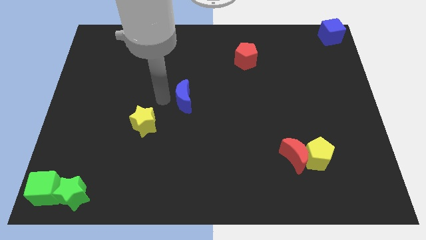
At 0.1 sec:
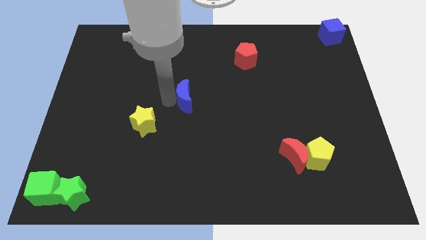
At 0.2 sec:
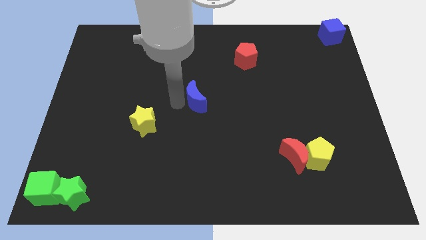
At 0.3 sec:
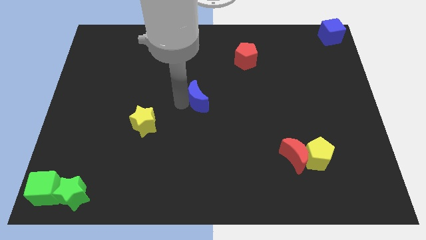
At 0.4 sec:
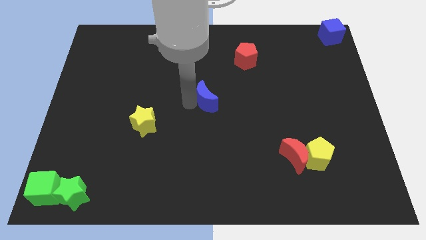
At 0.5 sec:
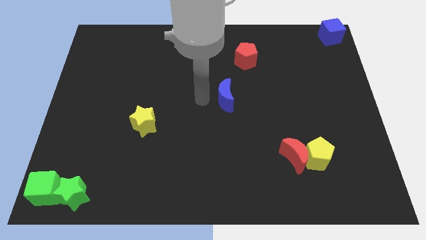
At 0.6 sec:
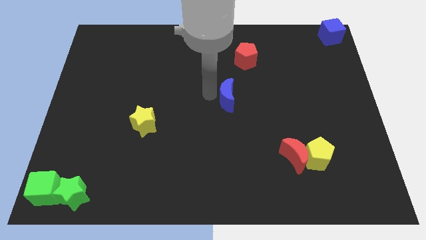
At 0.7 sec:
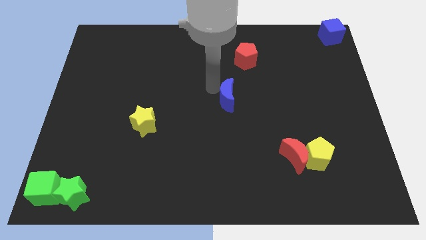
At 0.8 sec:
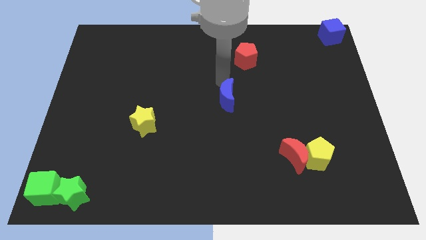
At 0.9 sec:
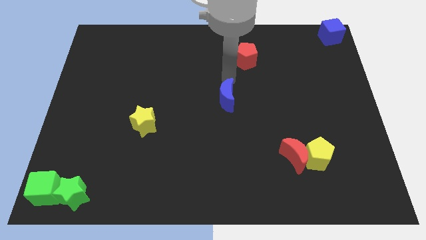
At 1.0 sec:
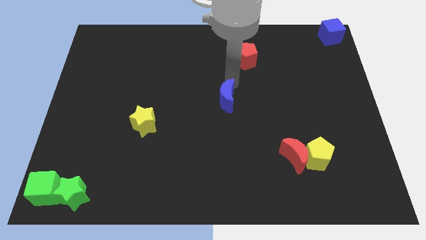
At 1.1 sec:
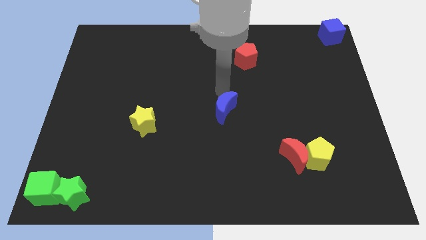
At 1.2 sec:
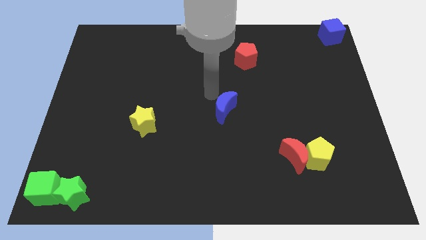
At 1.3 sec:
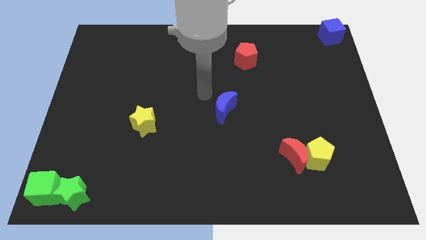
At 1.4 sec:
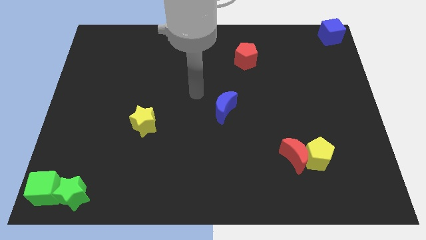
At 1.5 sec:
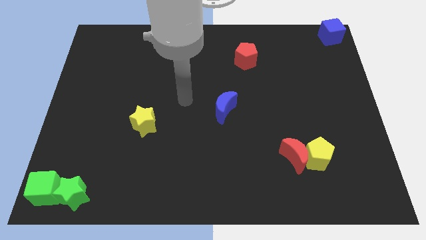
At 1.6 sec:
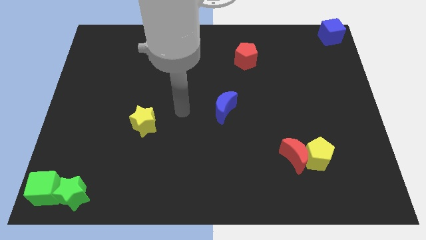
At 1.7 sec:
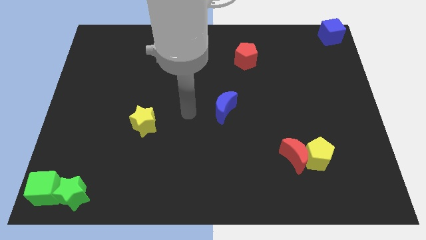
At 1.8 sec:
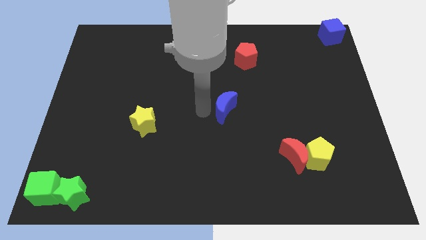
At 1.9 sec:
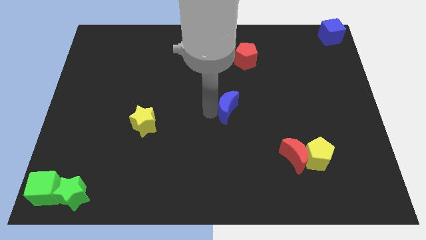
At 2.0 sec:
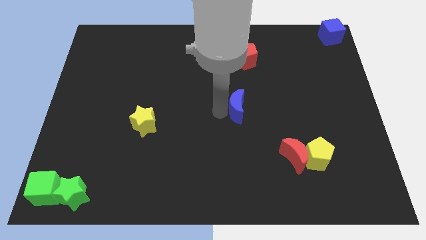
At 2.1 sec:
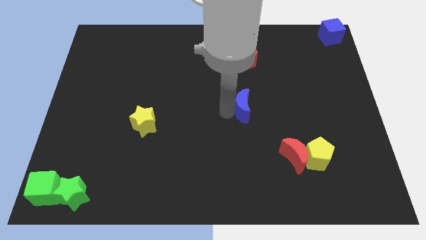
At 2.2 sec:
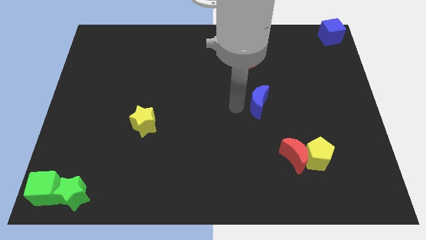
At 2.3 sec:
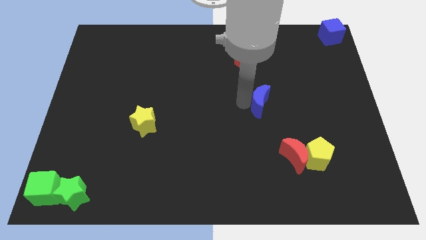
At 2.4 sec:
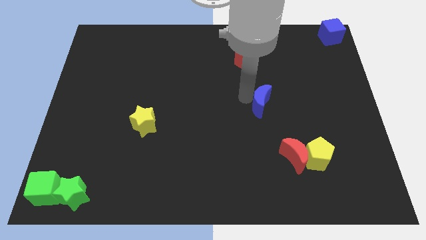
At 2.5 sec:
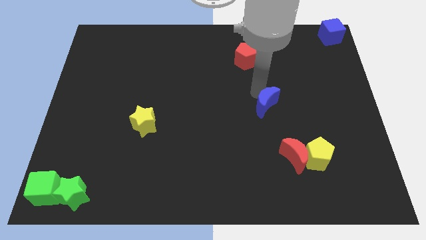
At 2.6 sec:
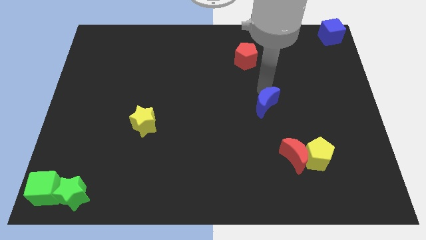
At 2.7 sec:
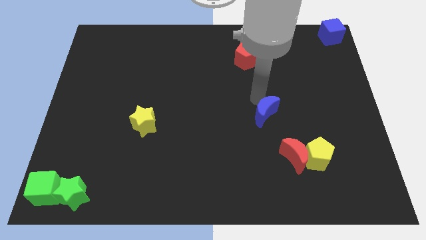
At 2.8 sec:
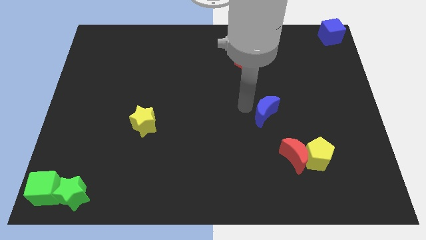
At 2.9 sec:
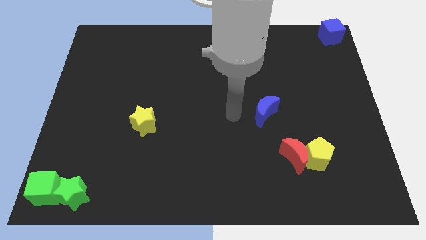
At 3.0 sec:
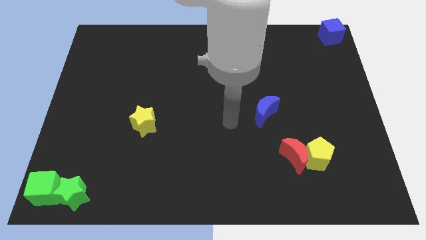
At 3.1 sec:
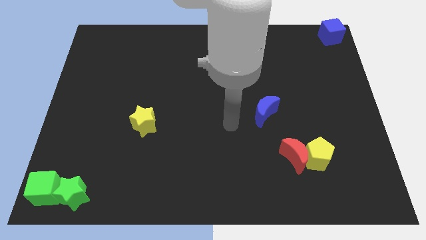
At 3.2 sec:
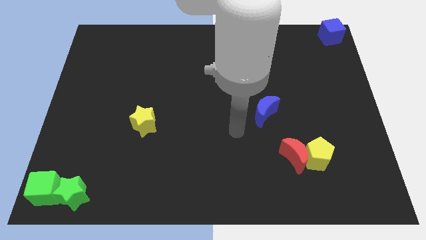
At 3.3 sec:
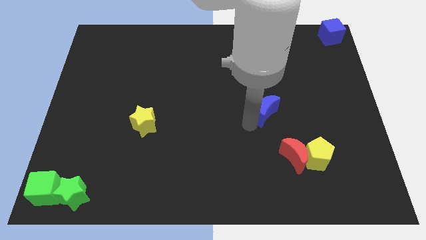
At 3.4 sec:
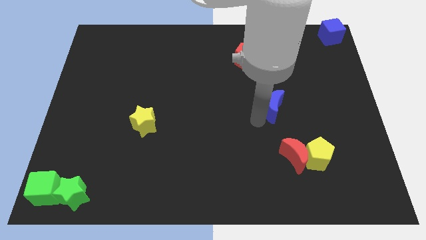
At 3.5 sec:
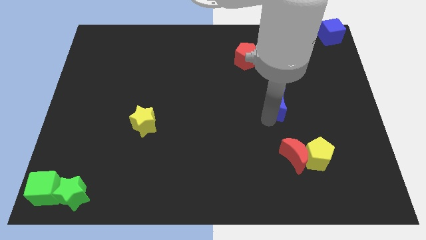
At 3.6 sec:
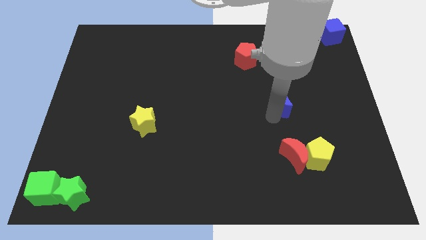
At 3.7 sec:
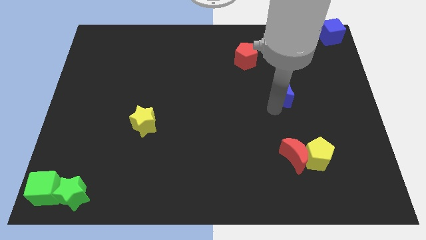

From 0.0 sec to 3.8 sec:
move the blue moon vertically above the red moon

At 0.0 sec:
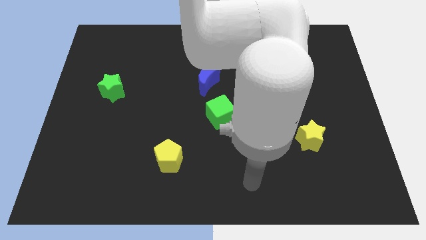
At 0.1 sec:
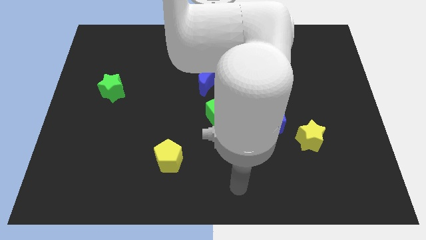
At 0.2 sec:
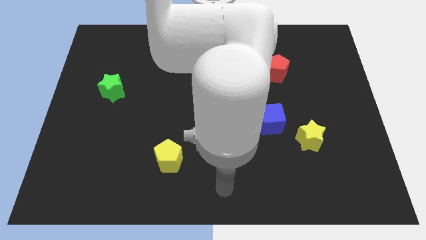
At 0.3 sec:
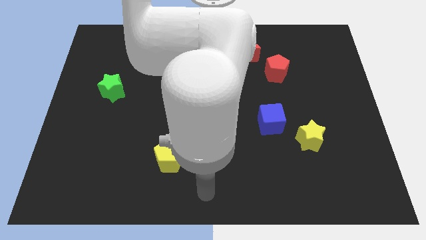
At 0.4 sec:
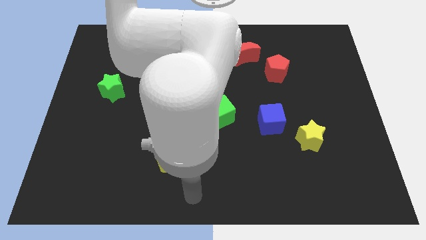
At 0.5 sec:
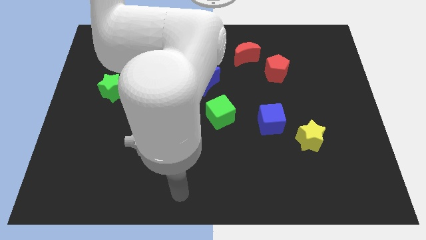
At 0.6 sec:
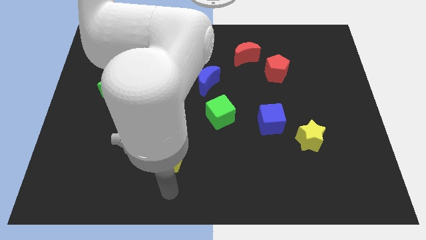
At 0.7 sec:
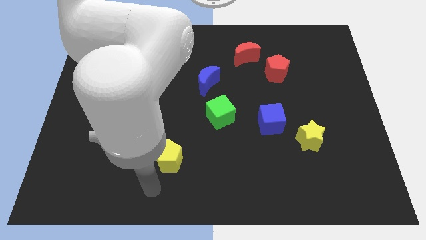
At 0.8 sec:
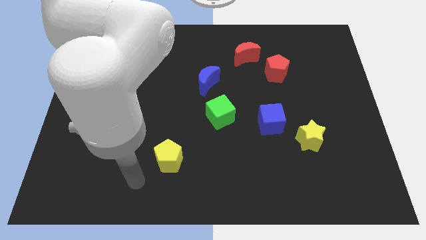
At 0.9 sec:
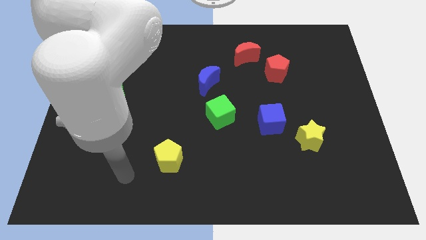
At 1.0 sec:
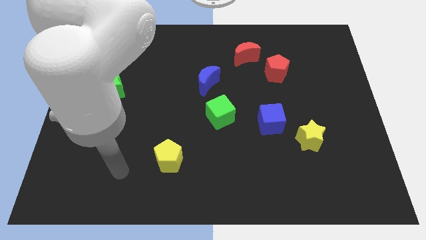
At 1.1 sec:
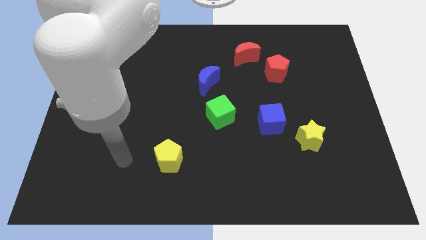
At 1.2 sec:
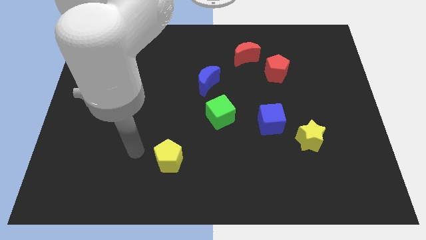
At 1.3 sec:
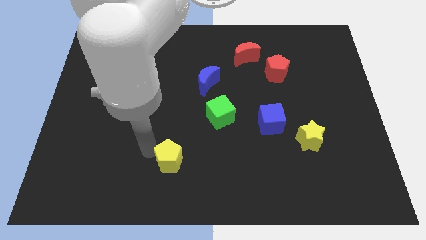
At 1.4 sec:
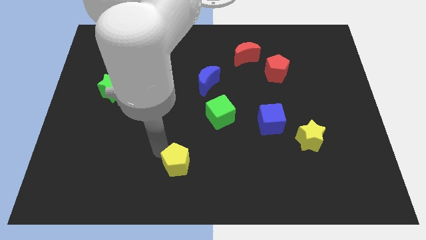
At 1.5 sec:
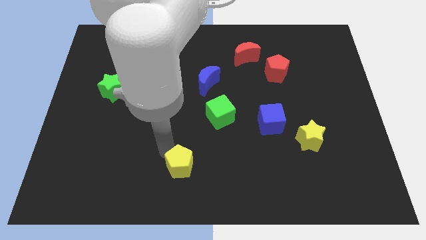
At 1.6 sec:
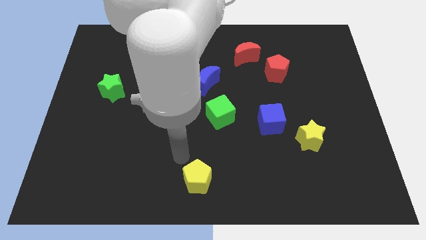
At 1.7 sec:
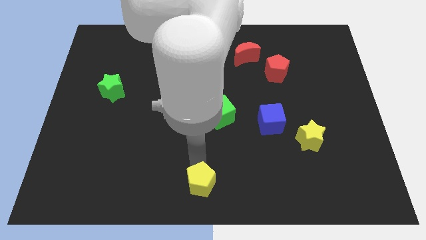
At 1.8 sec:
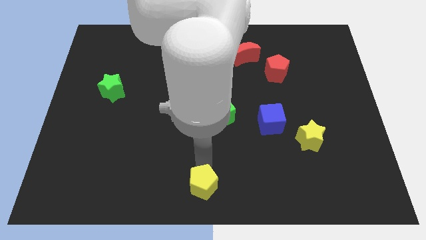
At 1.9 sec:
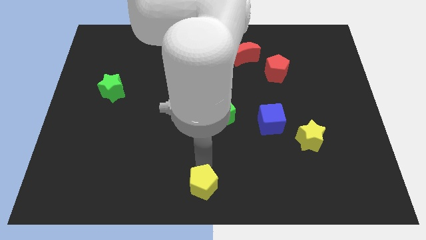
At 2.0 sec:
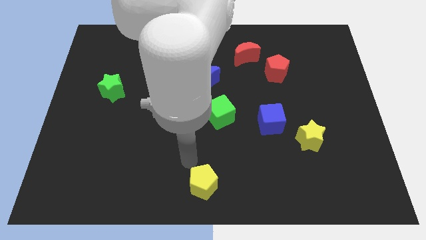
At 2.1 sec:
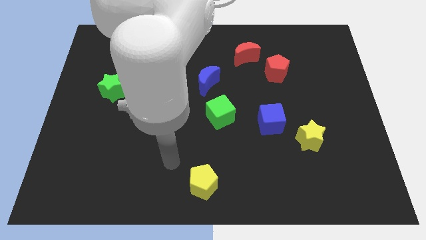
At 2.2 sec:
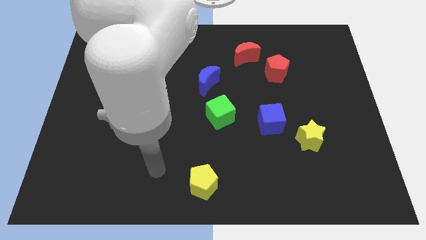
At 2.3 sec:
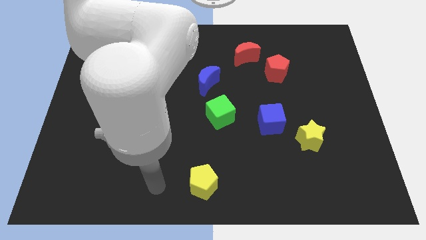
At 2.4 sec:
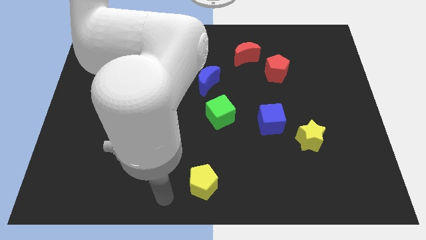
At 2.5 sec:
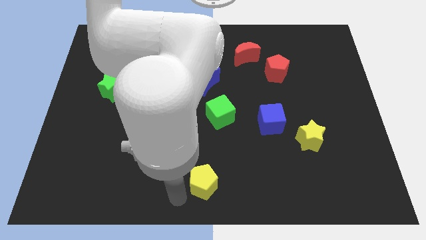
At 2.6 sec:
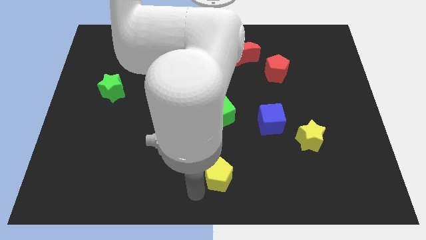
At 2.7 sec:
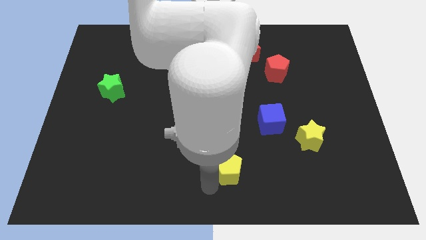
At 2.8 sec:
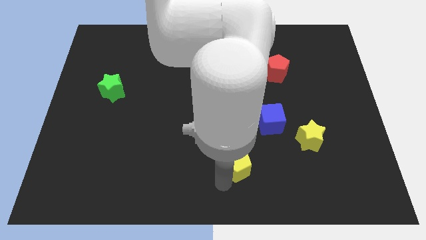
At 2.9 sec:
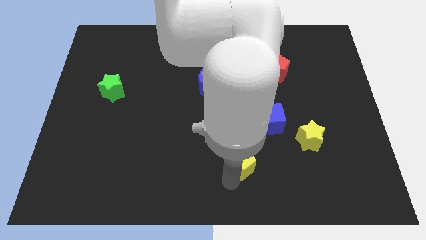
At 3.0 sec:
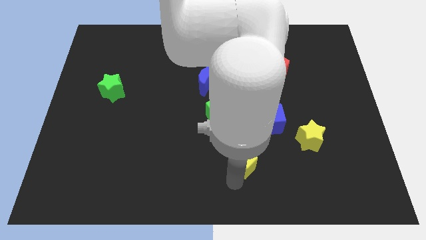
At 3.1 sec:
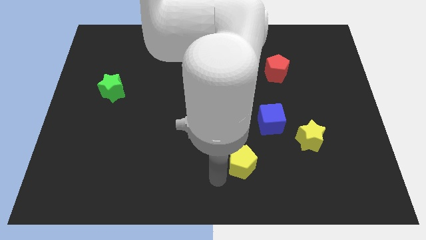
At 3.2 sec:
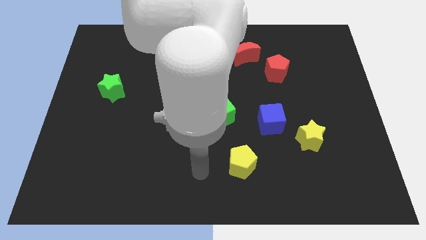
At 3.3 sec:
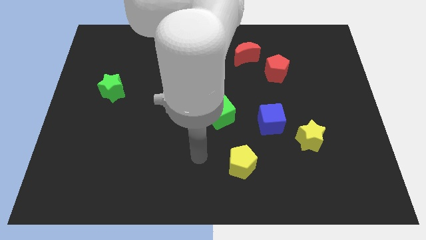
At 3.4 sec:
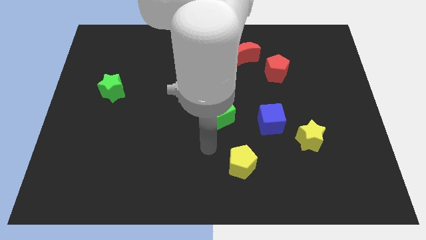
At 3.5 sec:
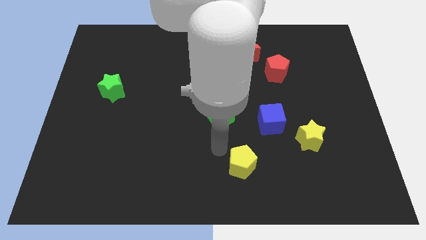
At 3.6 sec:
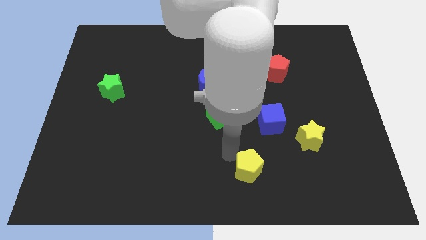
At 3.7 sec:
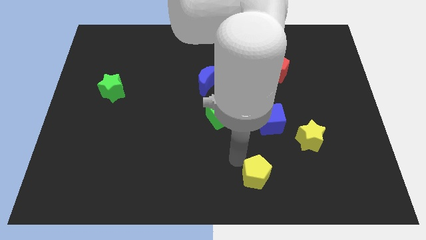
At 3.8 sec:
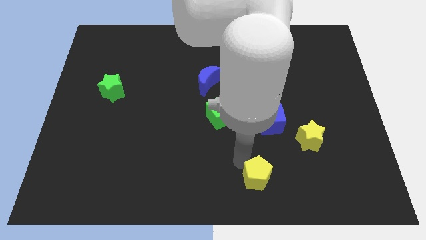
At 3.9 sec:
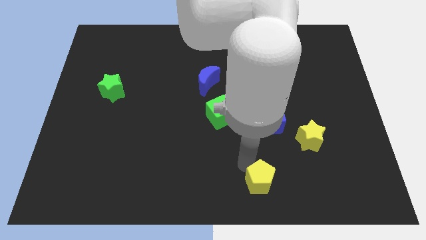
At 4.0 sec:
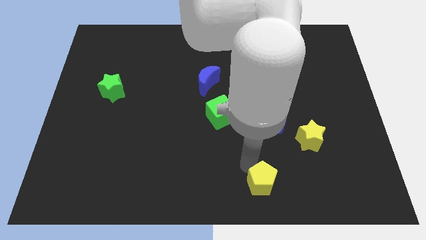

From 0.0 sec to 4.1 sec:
push yellow pentagon towards bottom center

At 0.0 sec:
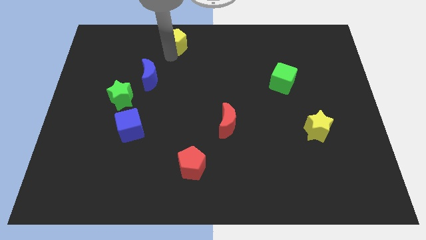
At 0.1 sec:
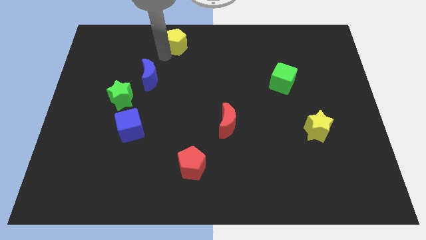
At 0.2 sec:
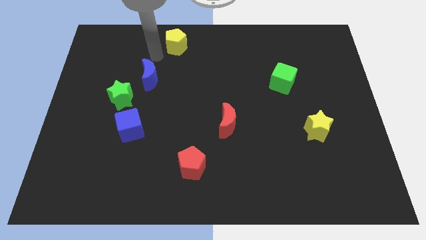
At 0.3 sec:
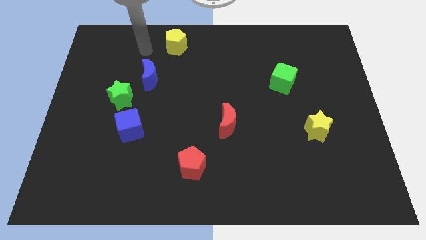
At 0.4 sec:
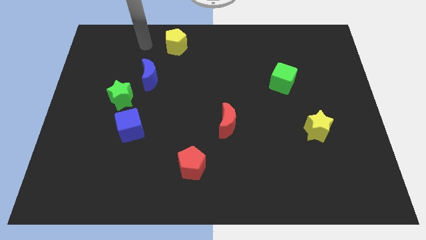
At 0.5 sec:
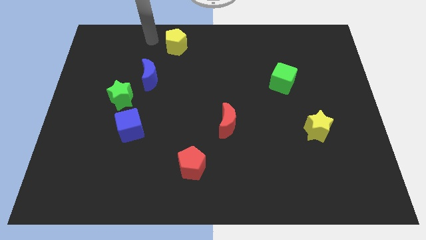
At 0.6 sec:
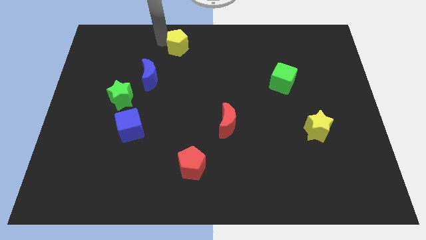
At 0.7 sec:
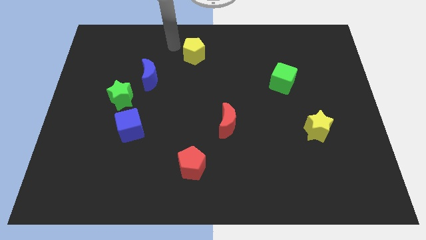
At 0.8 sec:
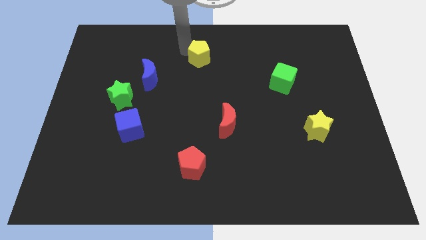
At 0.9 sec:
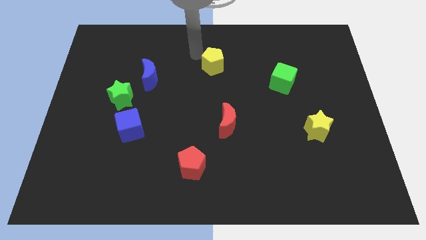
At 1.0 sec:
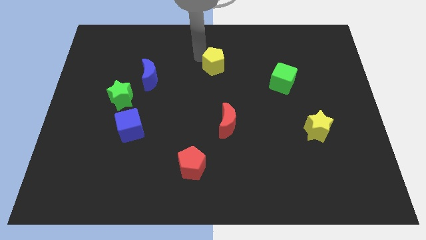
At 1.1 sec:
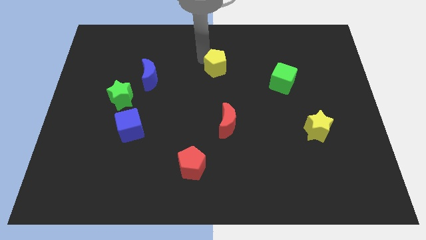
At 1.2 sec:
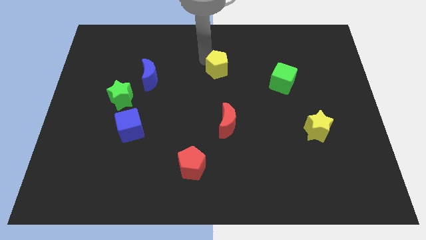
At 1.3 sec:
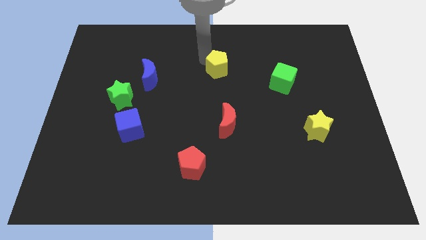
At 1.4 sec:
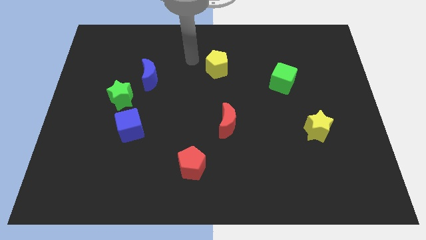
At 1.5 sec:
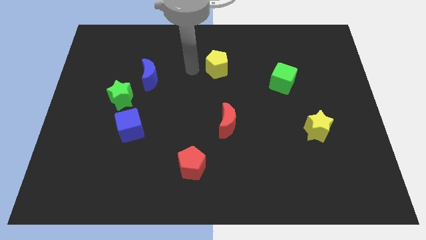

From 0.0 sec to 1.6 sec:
push the yellow pentagon to the top side of the red moon
